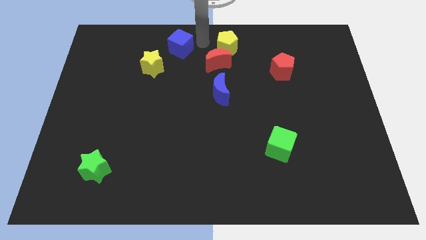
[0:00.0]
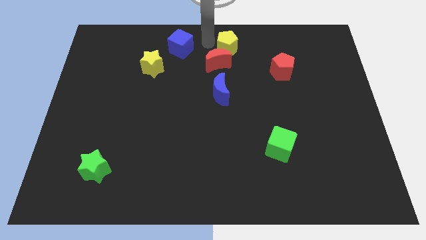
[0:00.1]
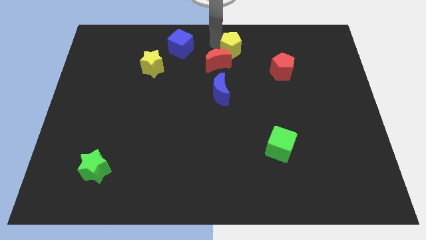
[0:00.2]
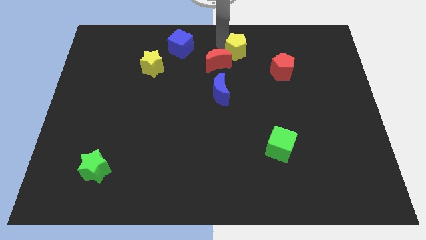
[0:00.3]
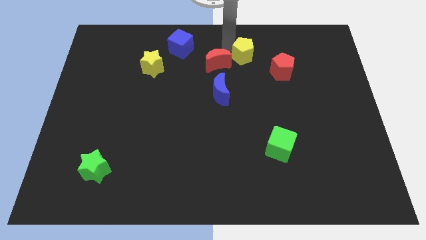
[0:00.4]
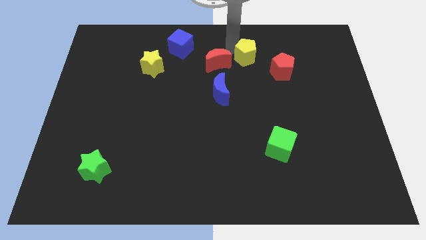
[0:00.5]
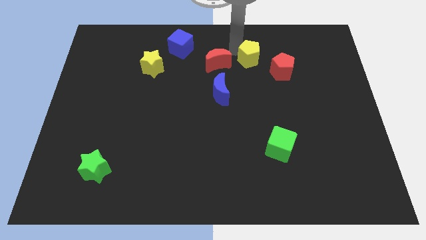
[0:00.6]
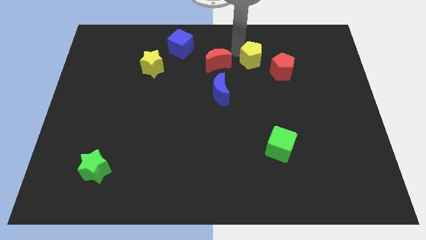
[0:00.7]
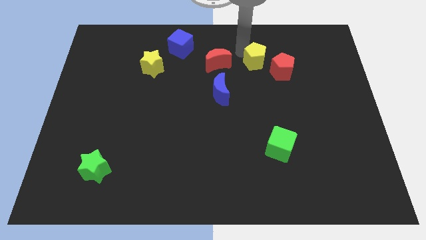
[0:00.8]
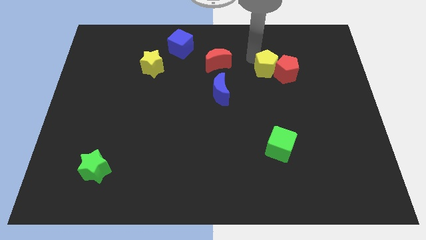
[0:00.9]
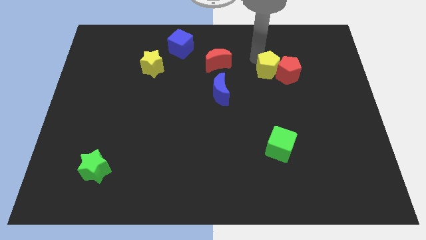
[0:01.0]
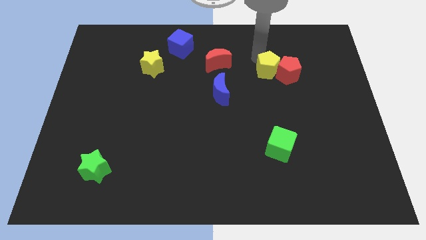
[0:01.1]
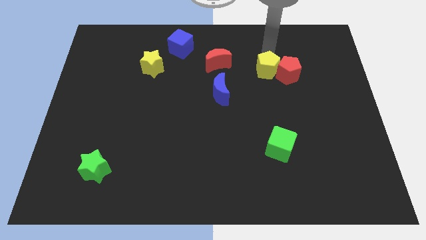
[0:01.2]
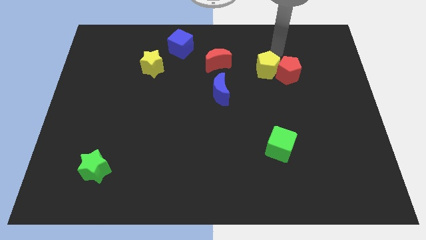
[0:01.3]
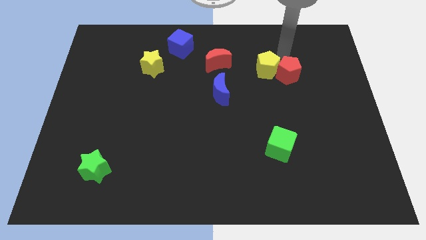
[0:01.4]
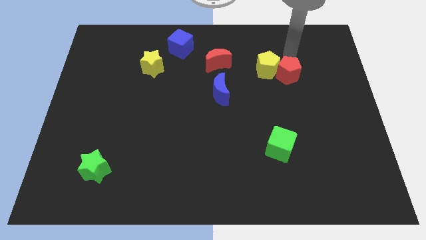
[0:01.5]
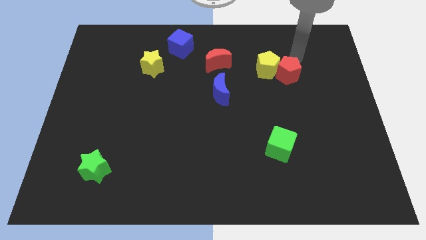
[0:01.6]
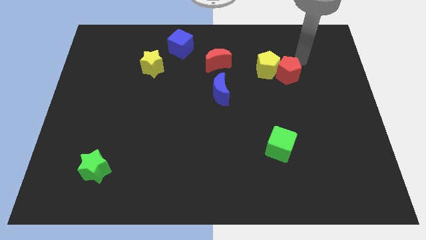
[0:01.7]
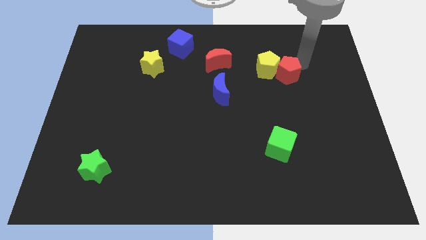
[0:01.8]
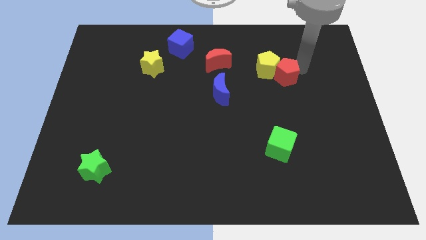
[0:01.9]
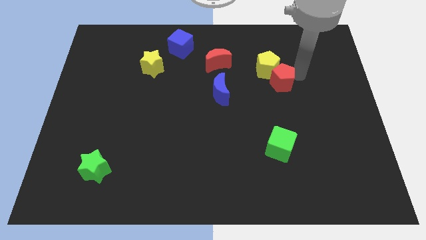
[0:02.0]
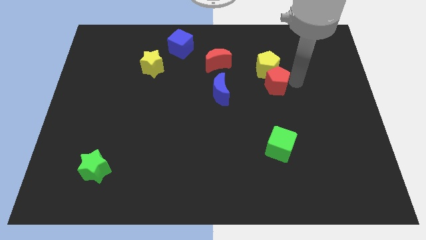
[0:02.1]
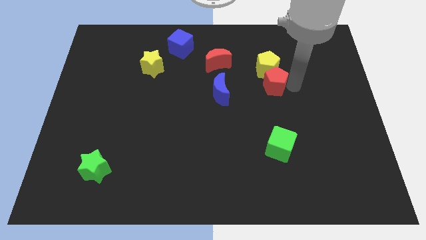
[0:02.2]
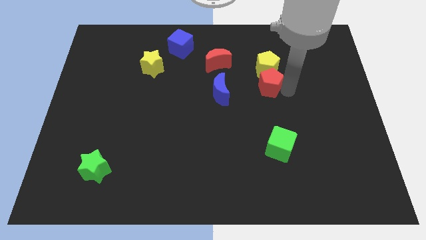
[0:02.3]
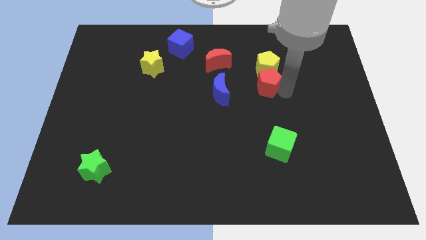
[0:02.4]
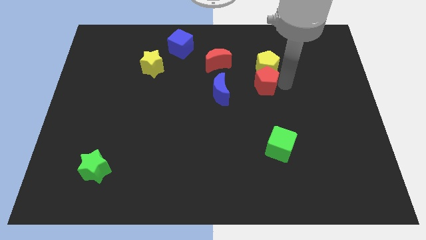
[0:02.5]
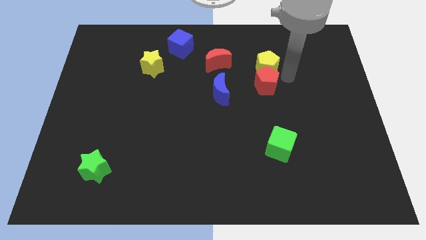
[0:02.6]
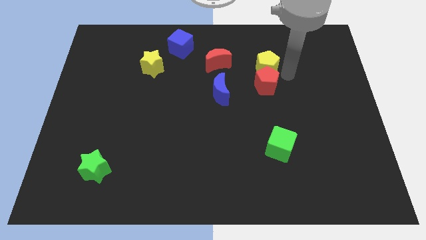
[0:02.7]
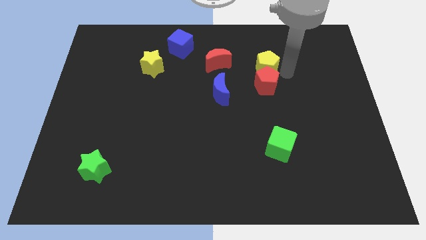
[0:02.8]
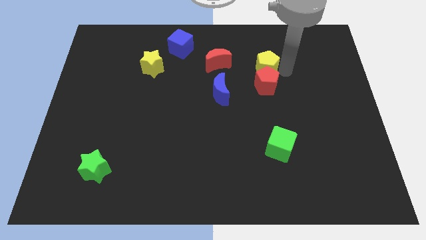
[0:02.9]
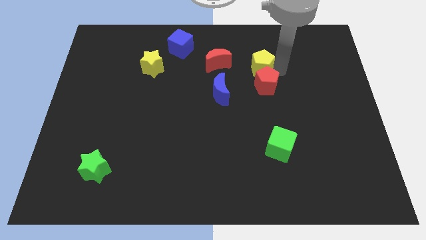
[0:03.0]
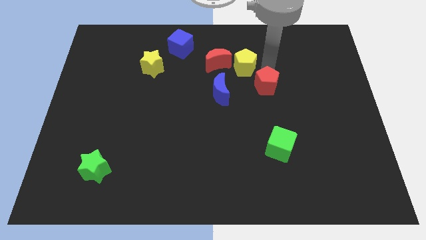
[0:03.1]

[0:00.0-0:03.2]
push red pentagon below yellow pentagon

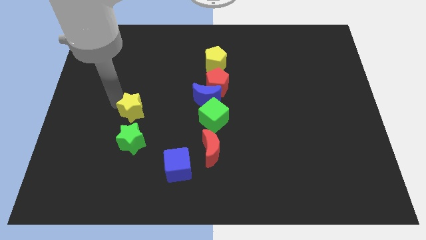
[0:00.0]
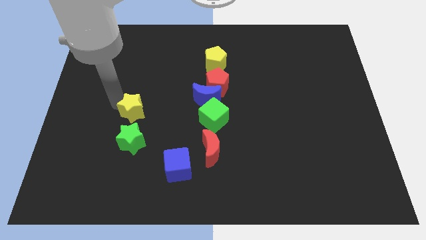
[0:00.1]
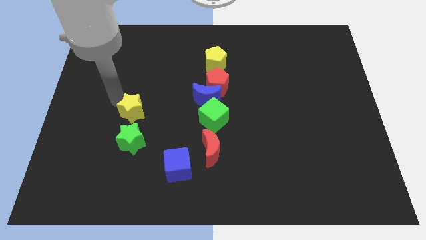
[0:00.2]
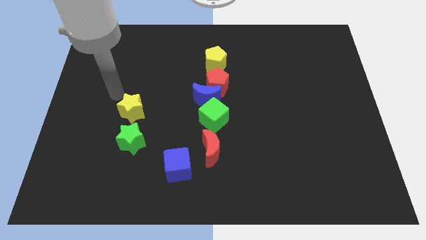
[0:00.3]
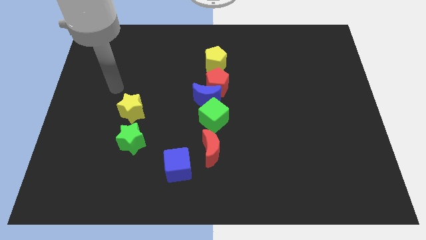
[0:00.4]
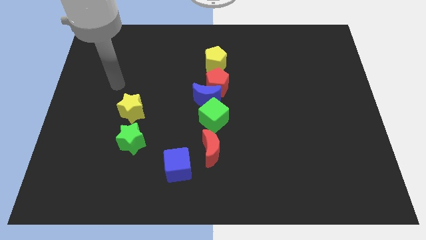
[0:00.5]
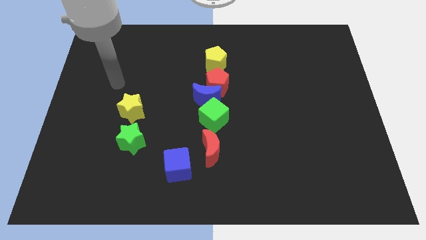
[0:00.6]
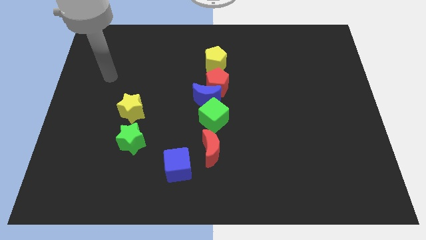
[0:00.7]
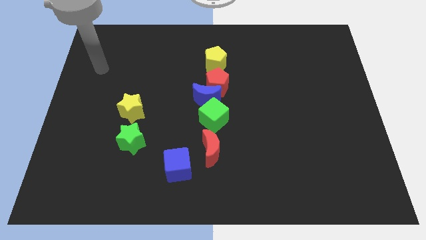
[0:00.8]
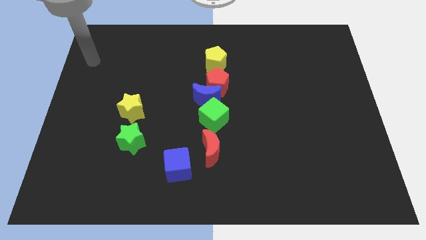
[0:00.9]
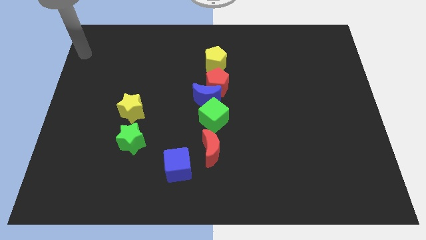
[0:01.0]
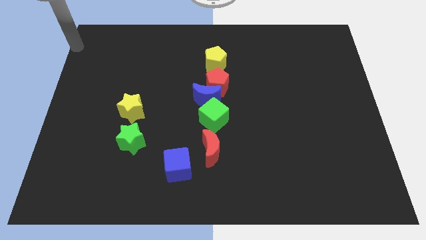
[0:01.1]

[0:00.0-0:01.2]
move your arm away from the yellow star

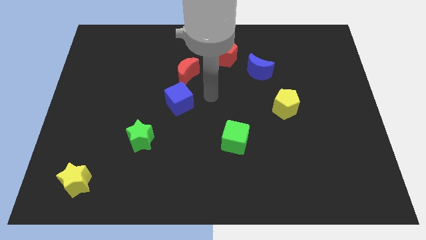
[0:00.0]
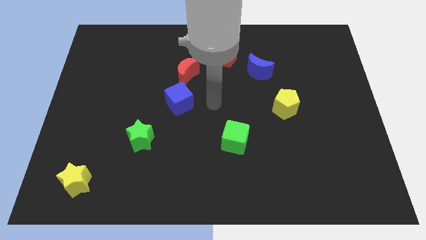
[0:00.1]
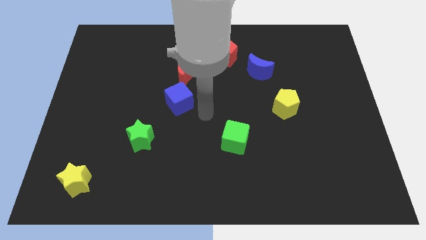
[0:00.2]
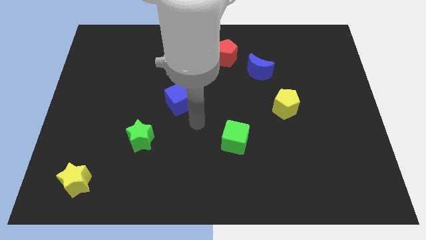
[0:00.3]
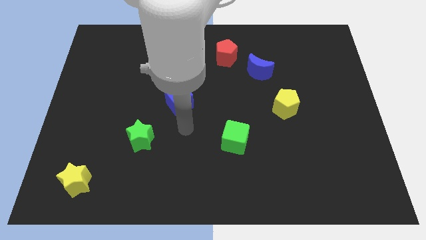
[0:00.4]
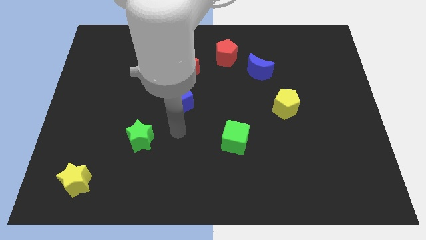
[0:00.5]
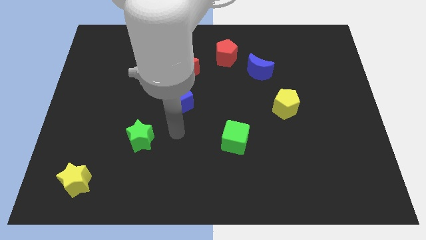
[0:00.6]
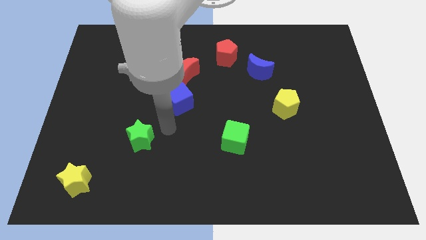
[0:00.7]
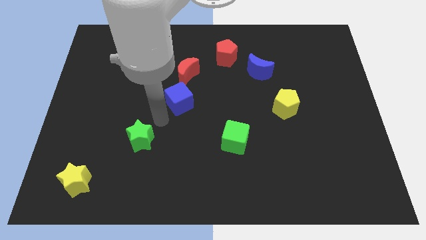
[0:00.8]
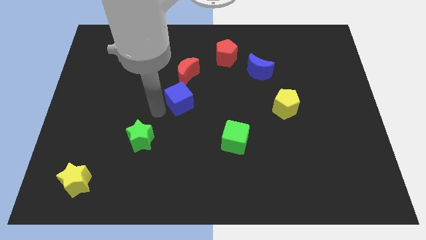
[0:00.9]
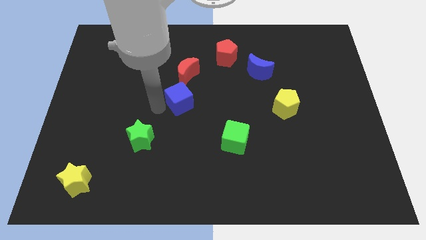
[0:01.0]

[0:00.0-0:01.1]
place the arm left to the blue cube

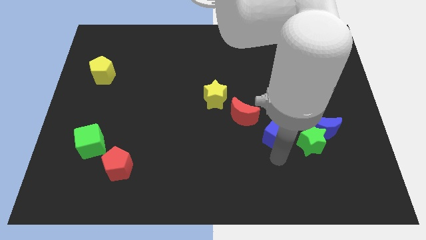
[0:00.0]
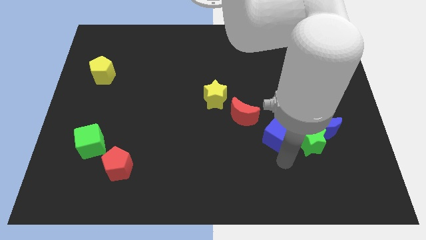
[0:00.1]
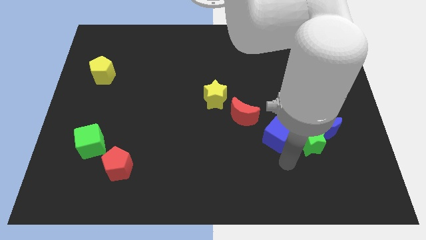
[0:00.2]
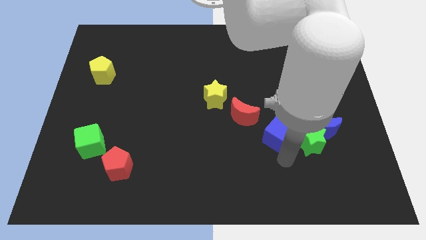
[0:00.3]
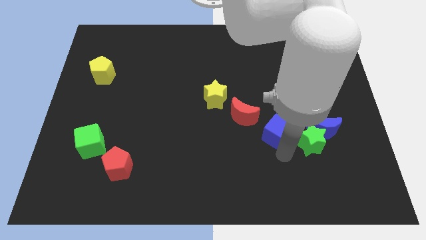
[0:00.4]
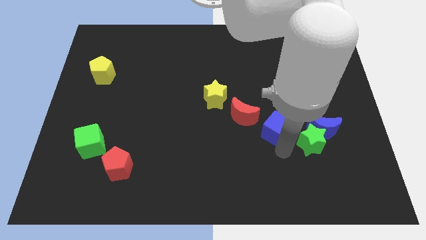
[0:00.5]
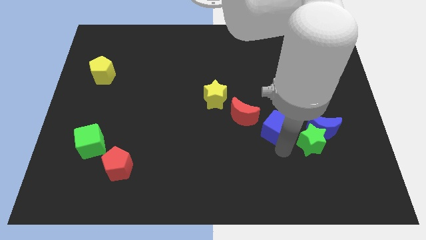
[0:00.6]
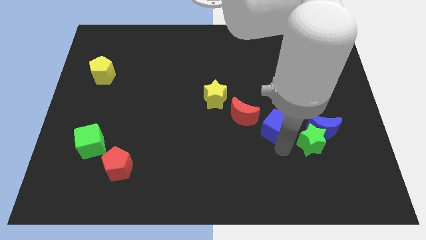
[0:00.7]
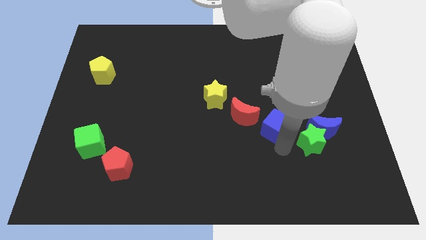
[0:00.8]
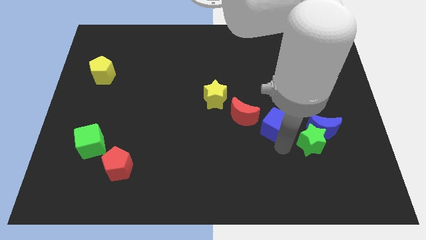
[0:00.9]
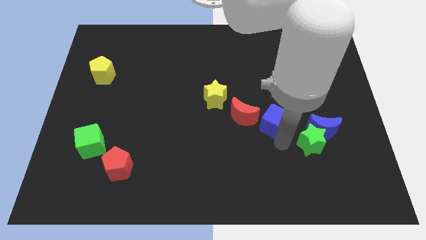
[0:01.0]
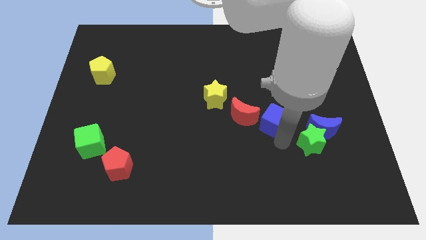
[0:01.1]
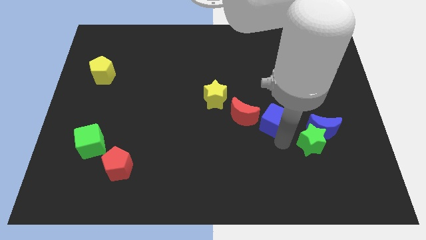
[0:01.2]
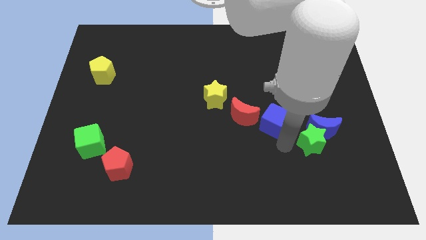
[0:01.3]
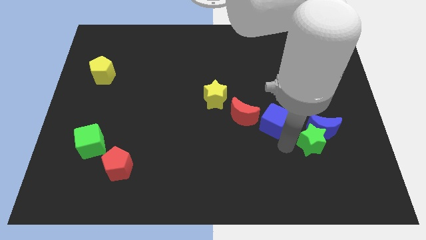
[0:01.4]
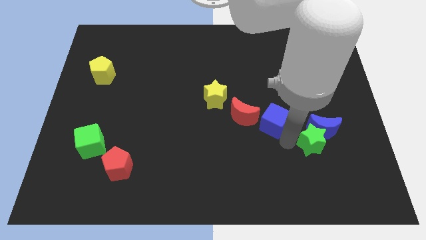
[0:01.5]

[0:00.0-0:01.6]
place the blue cube in between the moons

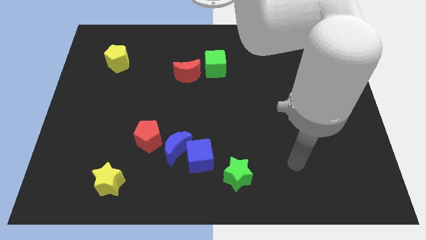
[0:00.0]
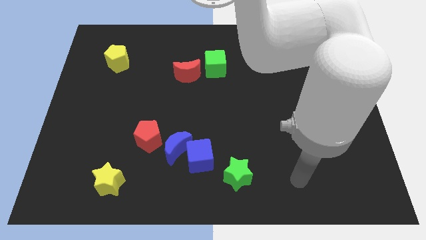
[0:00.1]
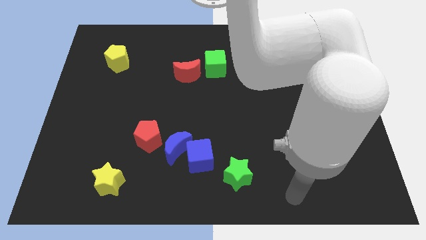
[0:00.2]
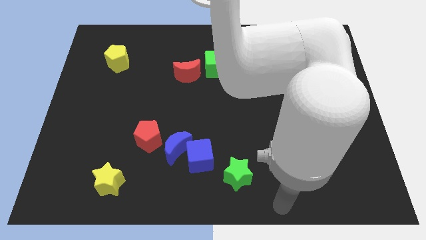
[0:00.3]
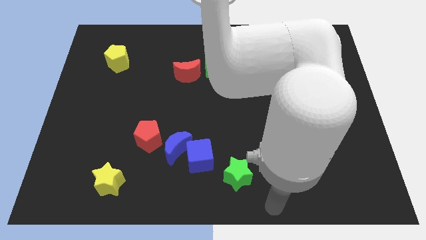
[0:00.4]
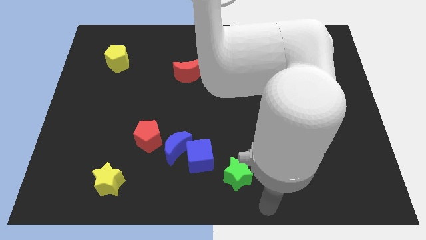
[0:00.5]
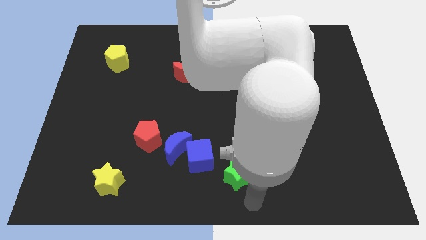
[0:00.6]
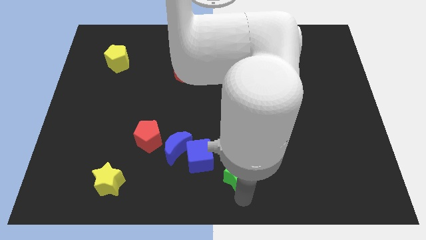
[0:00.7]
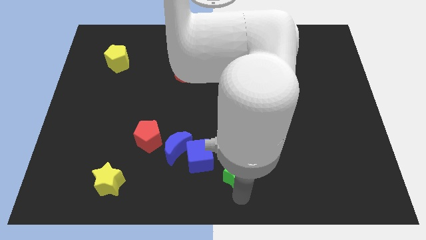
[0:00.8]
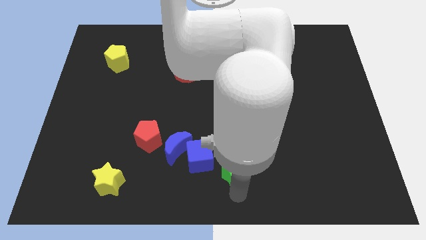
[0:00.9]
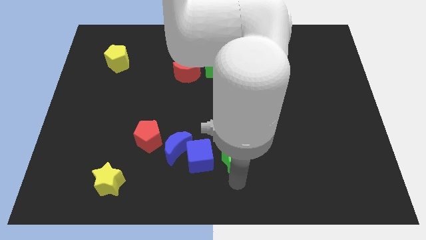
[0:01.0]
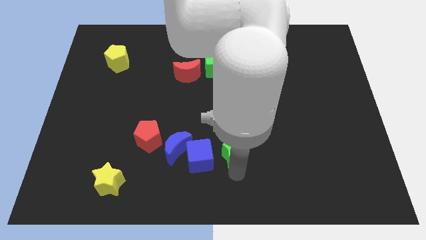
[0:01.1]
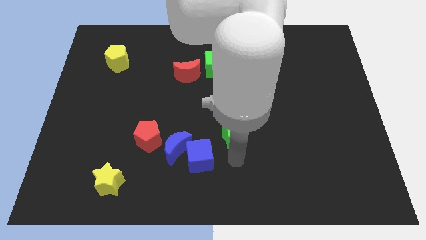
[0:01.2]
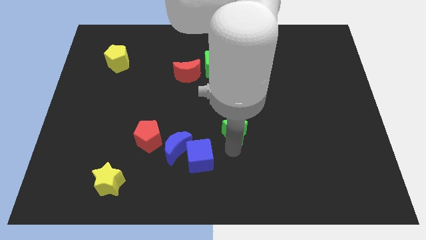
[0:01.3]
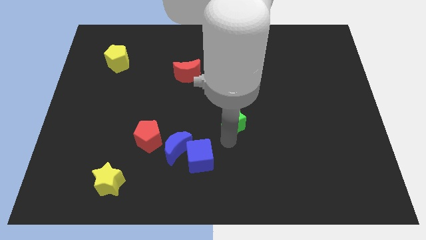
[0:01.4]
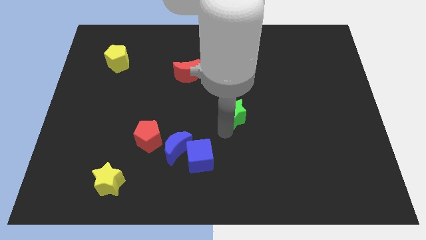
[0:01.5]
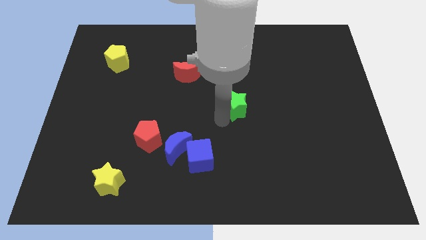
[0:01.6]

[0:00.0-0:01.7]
push the green start towards the green cube

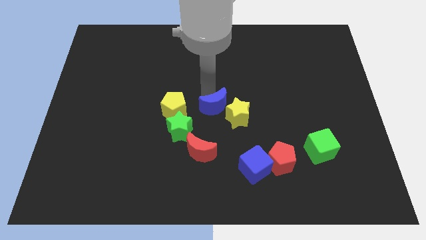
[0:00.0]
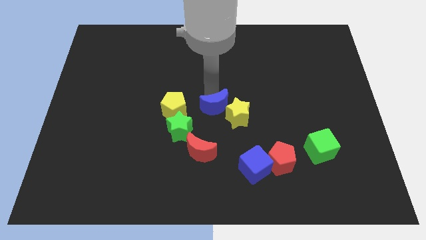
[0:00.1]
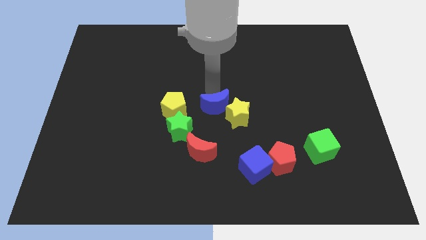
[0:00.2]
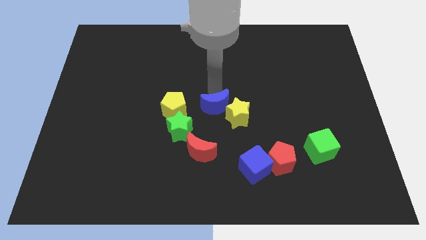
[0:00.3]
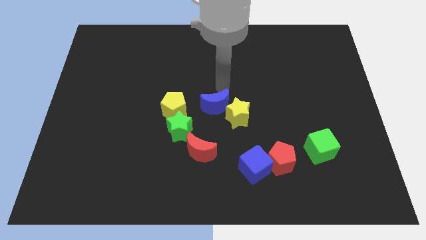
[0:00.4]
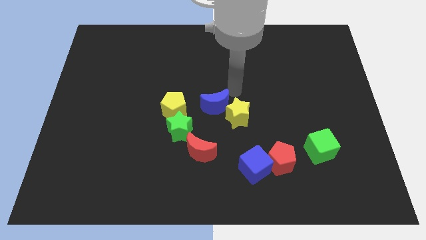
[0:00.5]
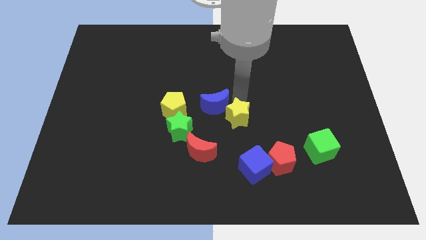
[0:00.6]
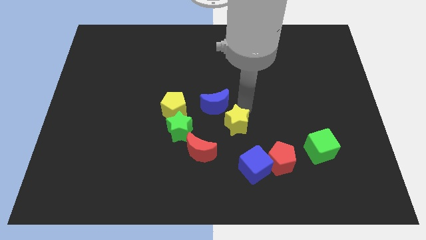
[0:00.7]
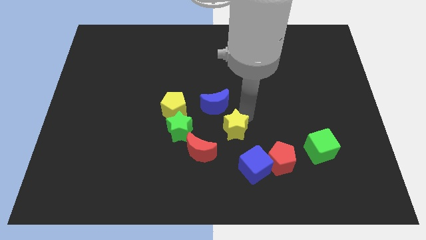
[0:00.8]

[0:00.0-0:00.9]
place yellow star to the right of green star
